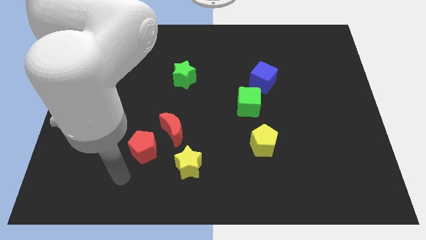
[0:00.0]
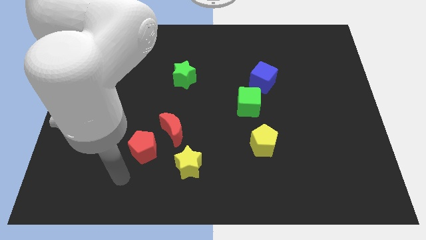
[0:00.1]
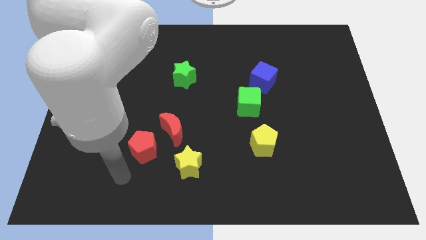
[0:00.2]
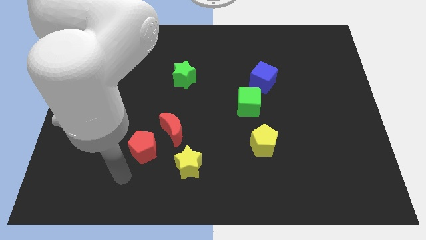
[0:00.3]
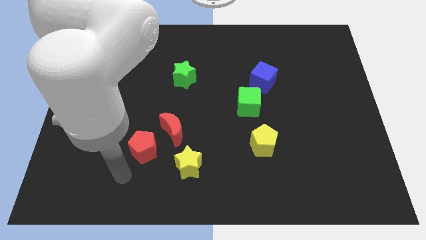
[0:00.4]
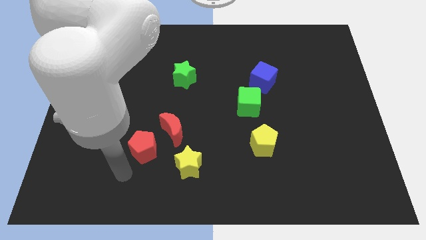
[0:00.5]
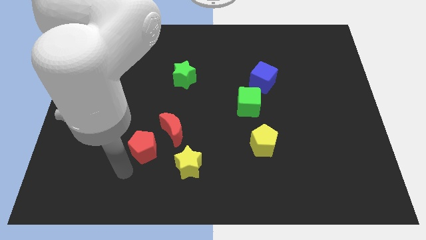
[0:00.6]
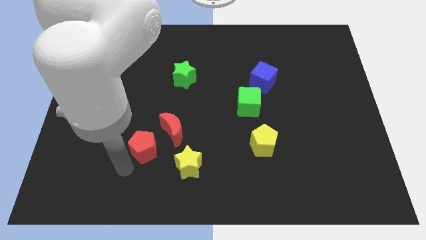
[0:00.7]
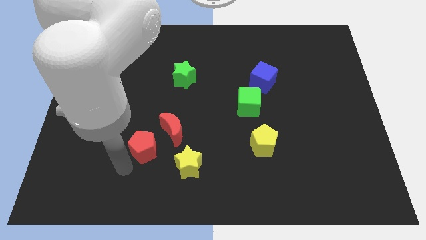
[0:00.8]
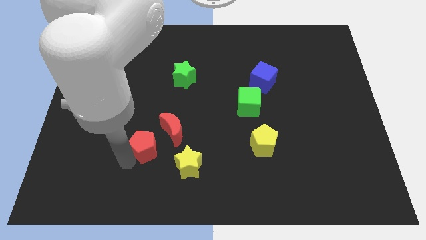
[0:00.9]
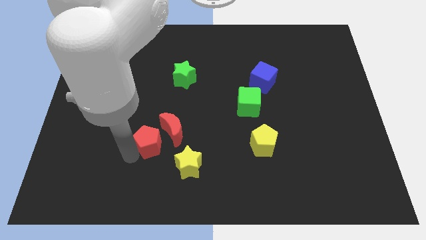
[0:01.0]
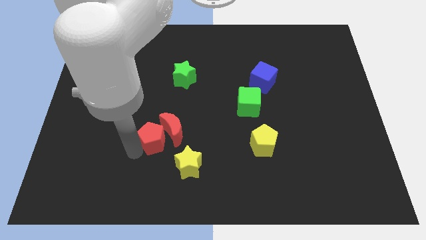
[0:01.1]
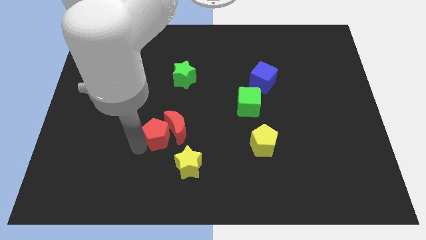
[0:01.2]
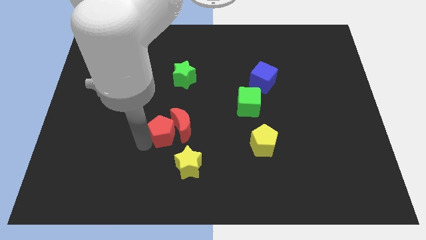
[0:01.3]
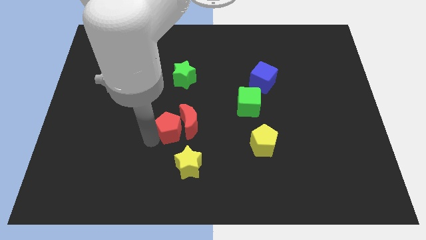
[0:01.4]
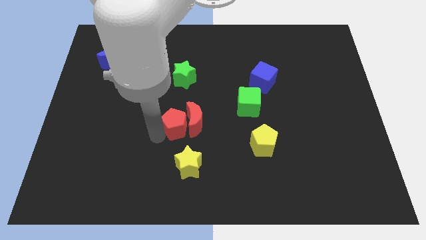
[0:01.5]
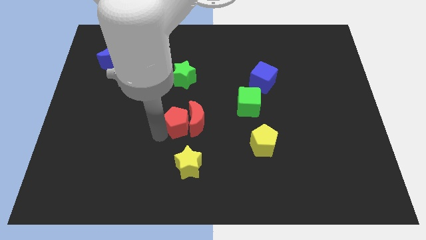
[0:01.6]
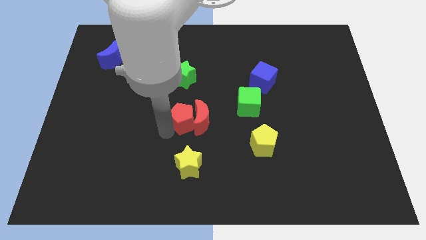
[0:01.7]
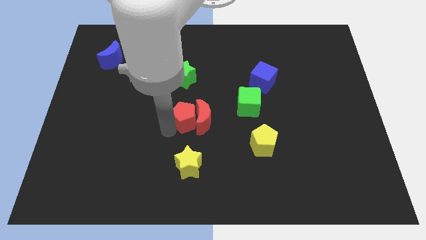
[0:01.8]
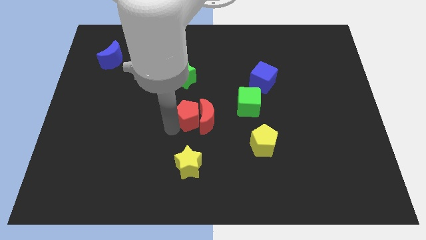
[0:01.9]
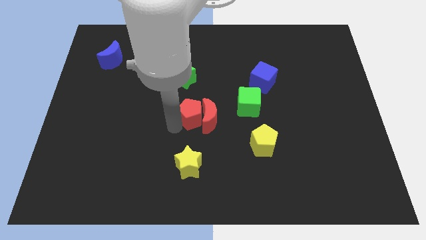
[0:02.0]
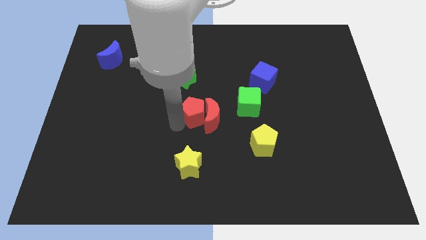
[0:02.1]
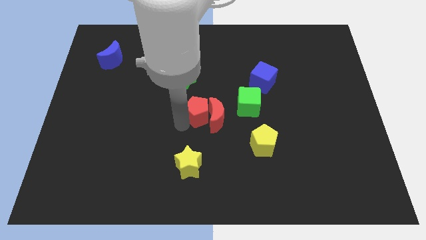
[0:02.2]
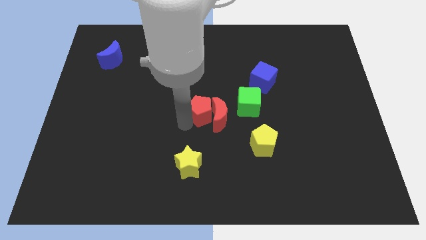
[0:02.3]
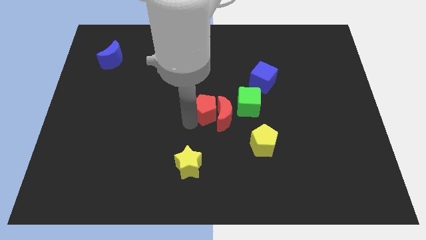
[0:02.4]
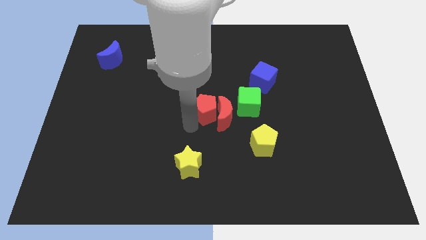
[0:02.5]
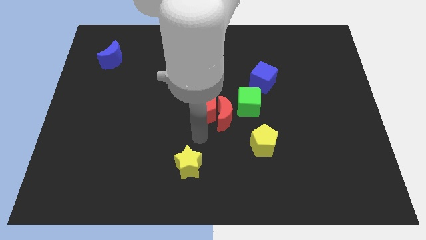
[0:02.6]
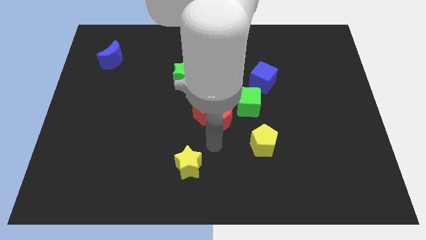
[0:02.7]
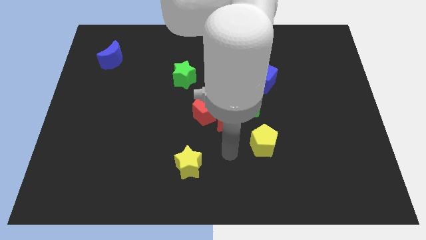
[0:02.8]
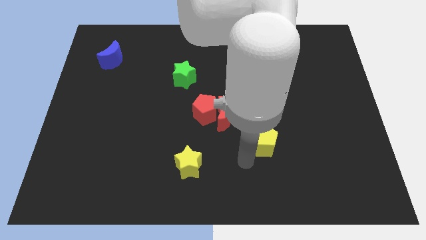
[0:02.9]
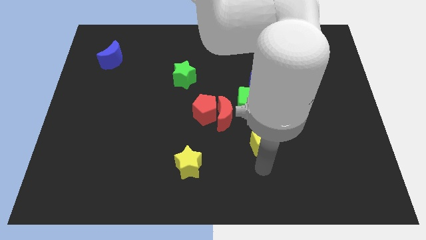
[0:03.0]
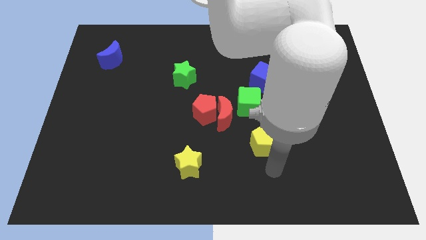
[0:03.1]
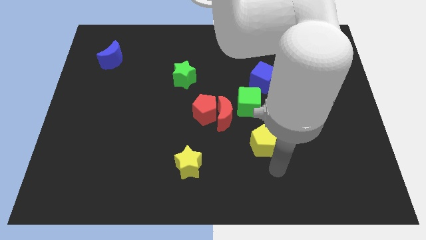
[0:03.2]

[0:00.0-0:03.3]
move the red pentagon to the green cube along with the red crescent

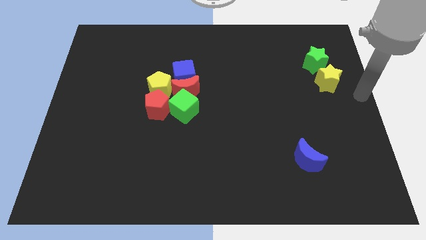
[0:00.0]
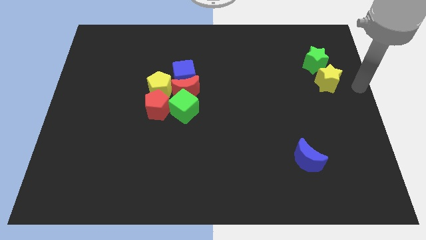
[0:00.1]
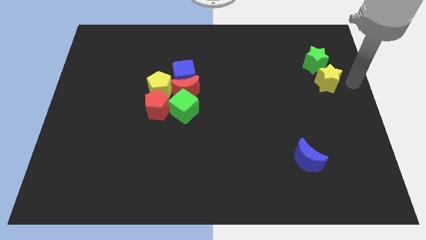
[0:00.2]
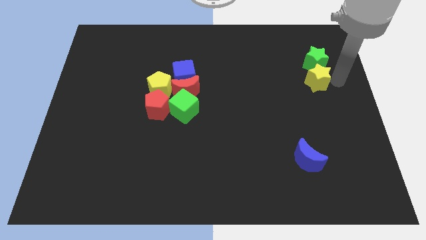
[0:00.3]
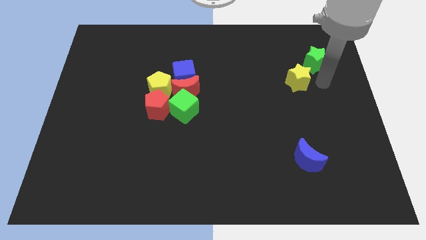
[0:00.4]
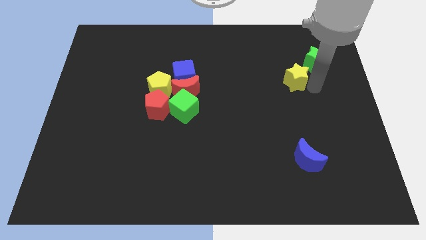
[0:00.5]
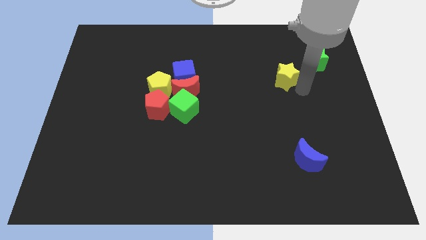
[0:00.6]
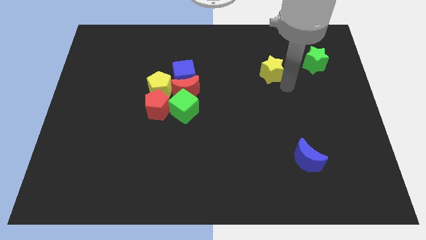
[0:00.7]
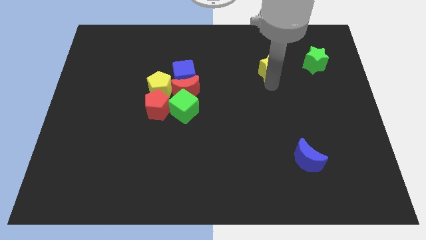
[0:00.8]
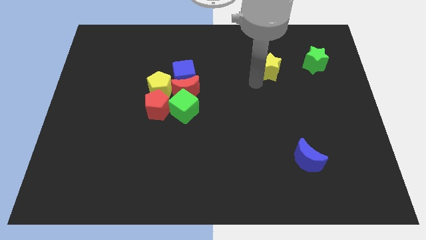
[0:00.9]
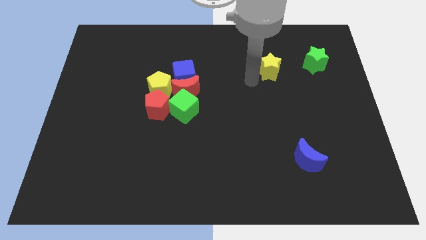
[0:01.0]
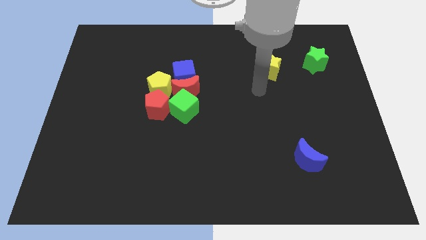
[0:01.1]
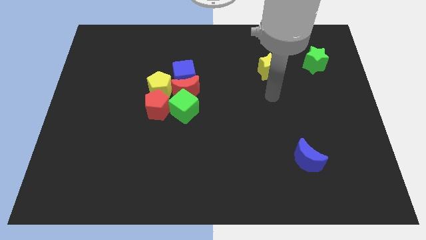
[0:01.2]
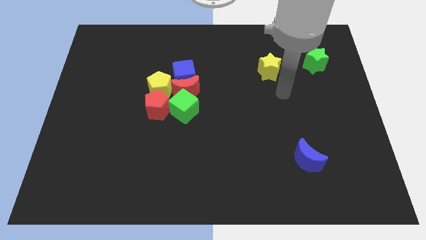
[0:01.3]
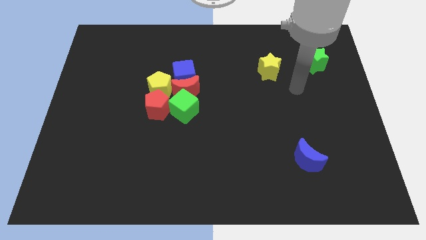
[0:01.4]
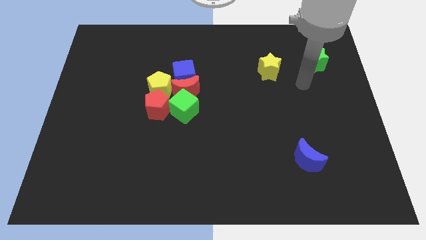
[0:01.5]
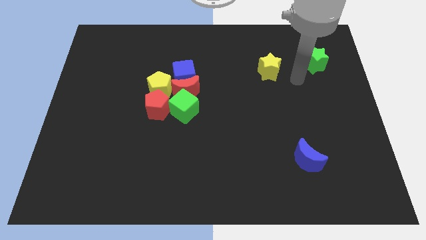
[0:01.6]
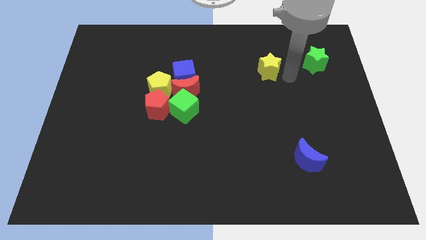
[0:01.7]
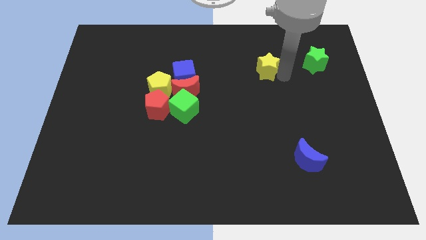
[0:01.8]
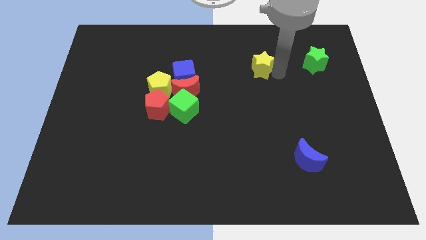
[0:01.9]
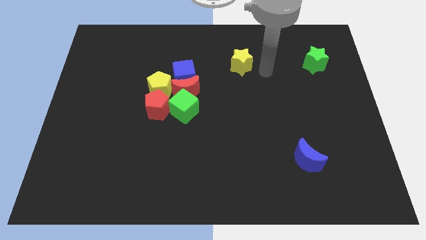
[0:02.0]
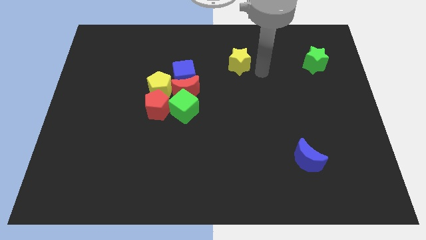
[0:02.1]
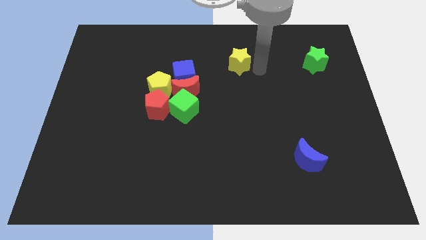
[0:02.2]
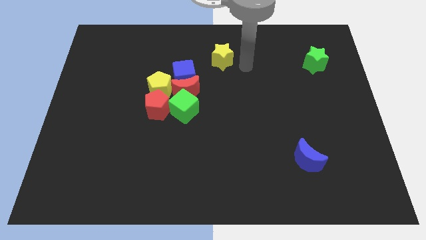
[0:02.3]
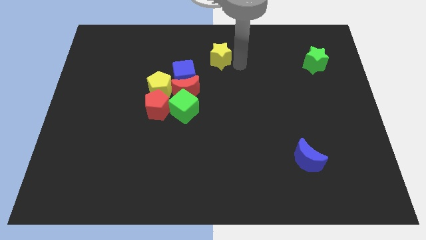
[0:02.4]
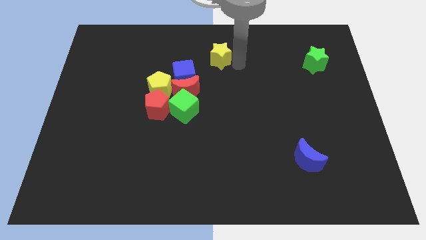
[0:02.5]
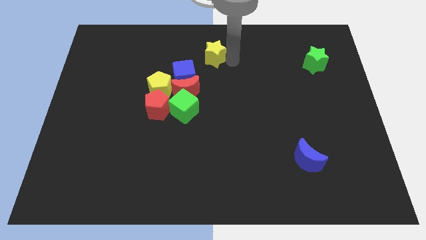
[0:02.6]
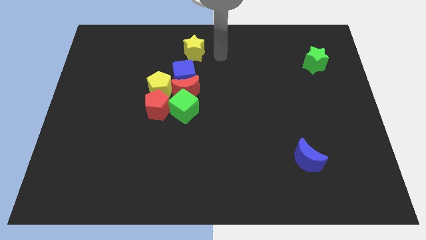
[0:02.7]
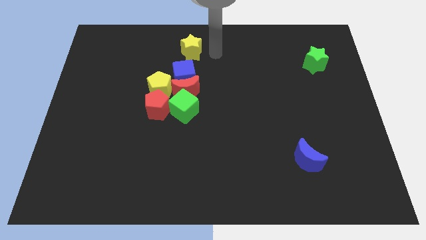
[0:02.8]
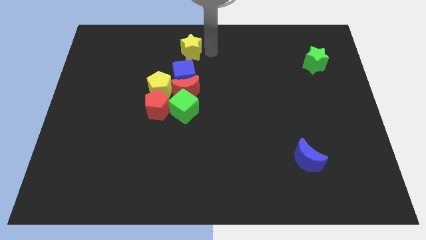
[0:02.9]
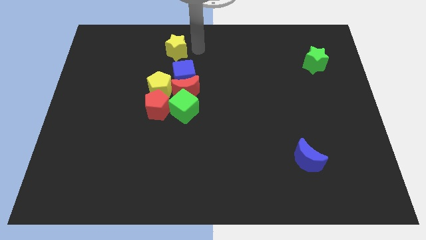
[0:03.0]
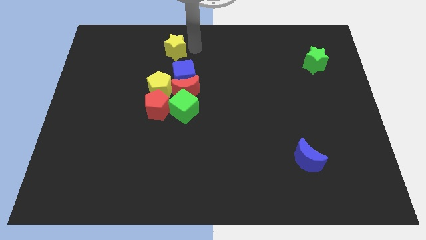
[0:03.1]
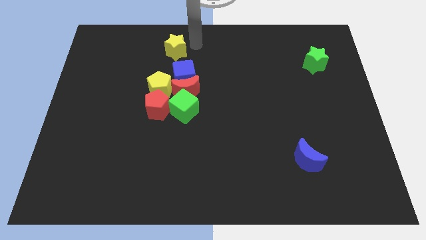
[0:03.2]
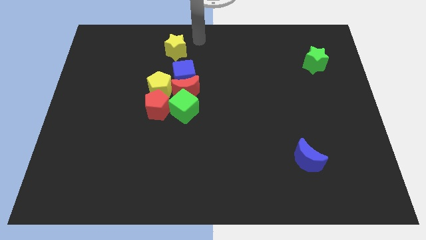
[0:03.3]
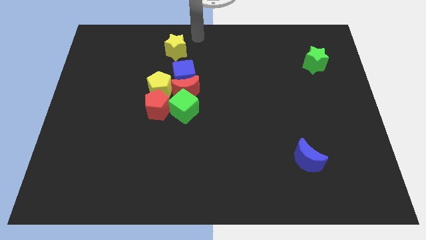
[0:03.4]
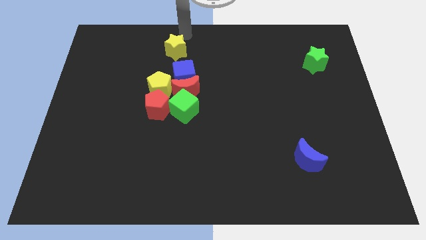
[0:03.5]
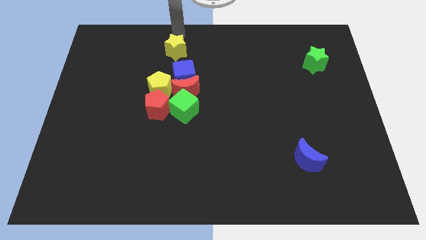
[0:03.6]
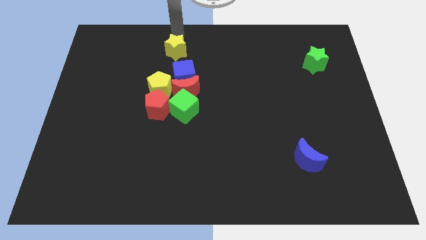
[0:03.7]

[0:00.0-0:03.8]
separate yellow star from the green star

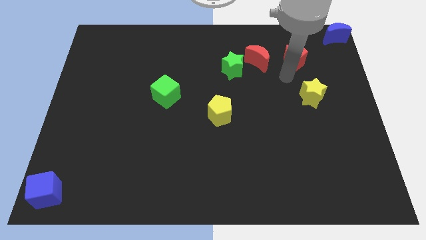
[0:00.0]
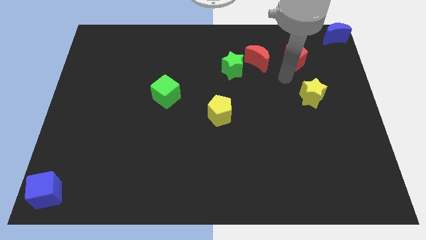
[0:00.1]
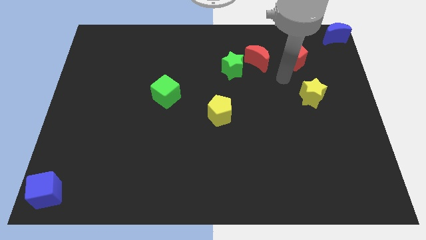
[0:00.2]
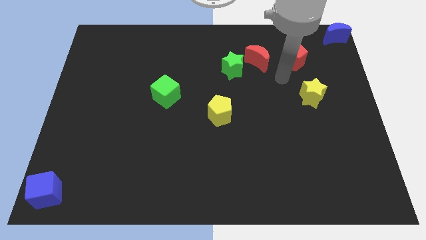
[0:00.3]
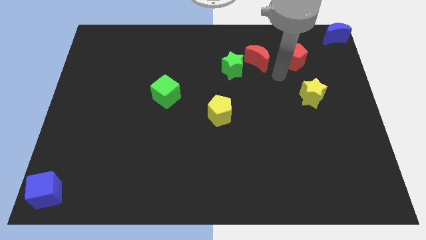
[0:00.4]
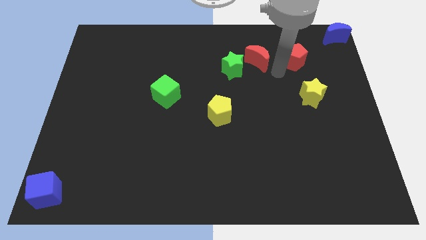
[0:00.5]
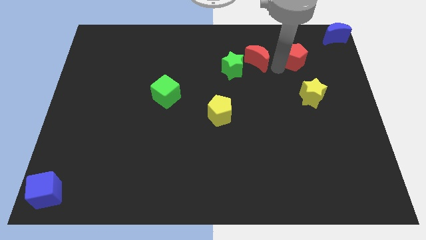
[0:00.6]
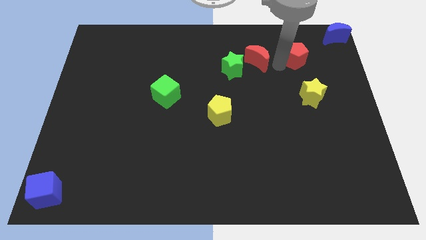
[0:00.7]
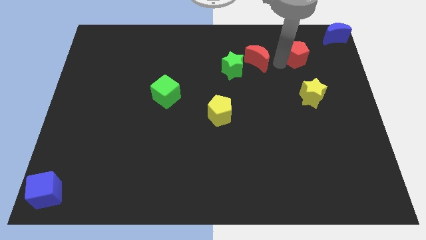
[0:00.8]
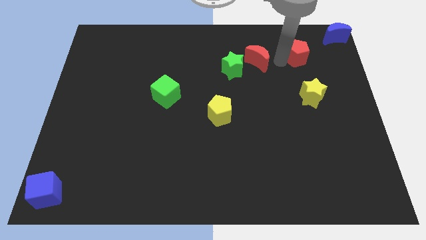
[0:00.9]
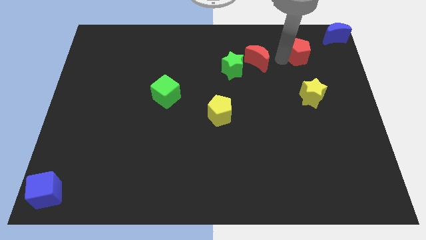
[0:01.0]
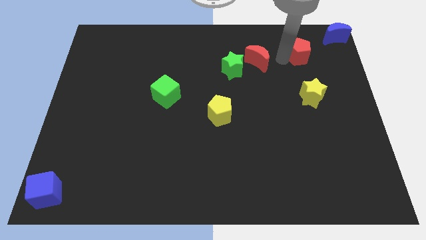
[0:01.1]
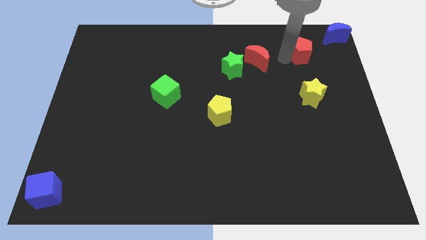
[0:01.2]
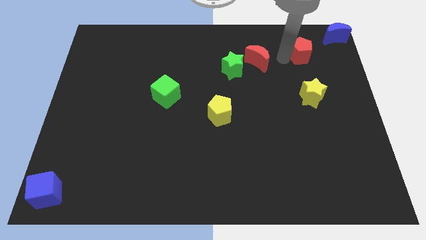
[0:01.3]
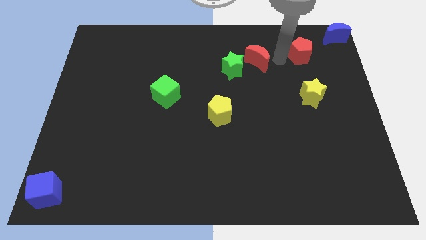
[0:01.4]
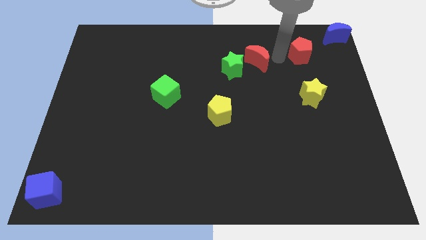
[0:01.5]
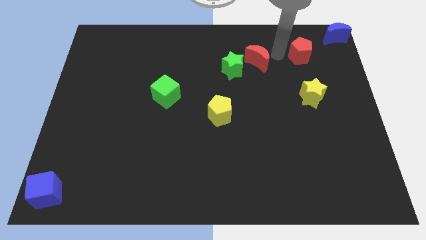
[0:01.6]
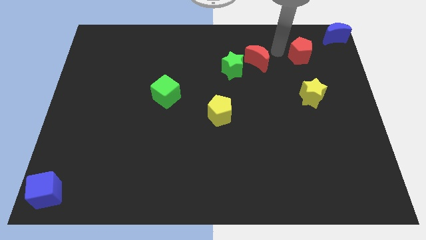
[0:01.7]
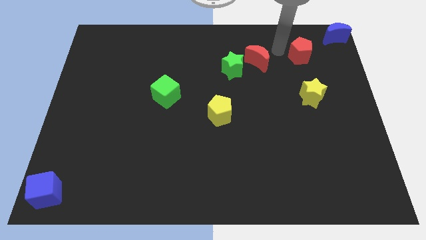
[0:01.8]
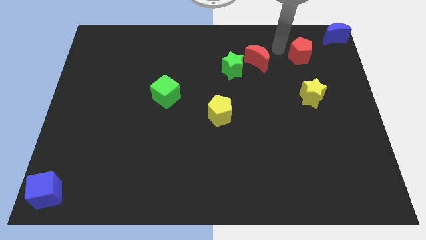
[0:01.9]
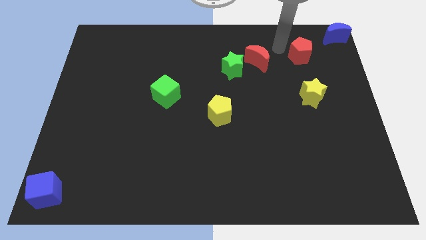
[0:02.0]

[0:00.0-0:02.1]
move red pentagon towards the blue moon
